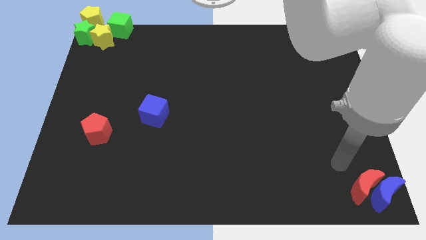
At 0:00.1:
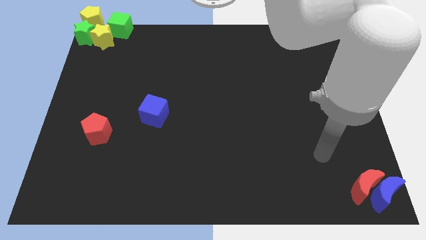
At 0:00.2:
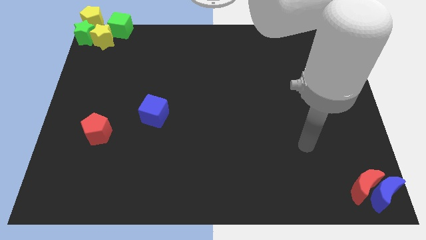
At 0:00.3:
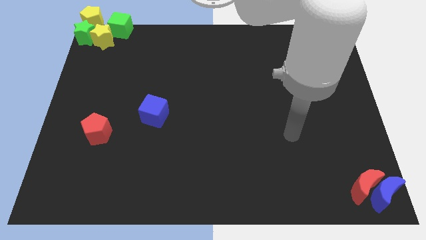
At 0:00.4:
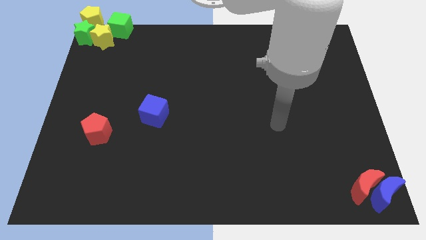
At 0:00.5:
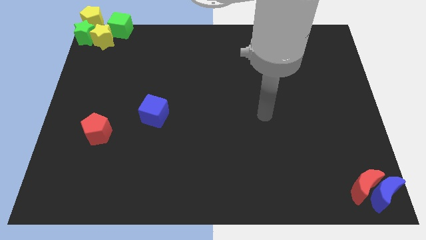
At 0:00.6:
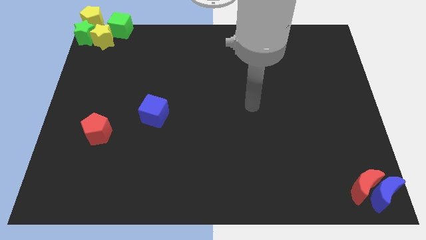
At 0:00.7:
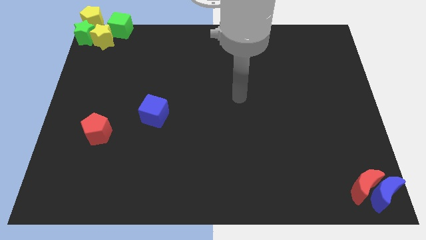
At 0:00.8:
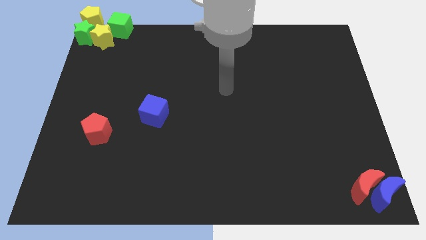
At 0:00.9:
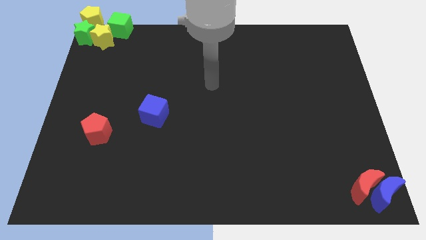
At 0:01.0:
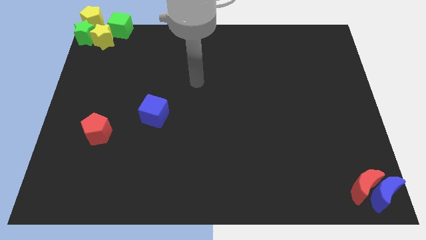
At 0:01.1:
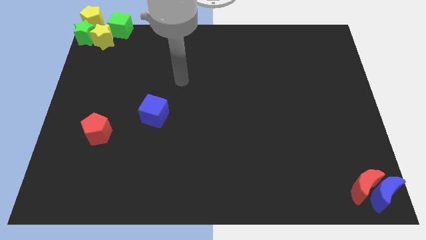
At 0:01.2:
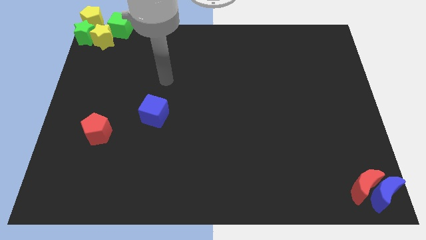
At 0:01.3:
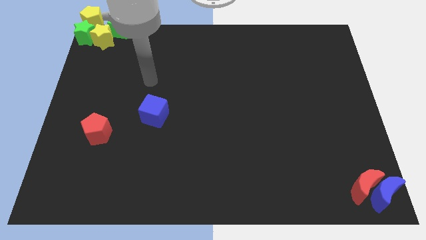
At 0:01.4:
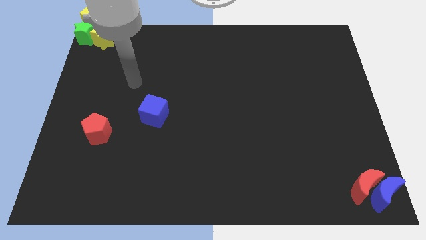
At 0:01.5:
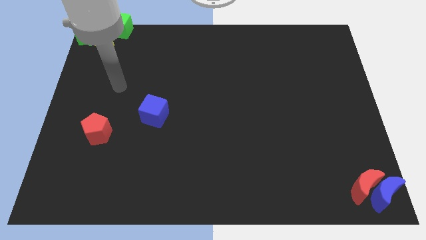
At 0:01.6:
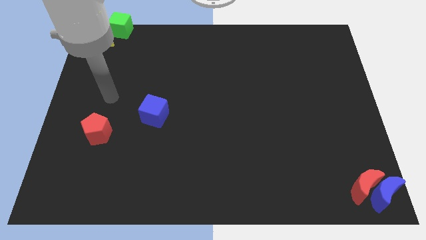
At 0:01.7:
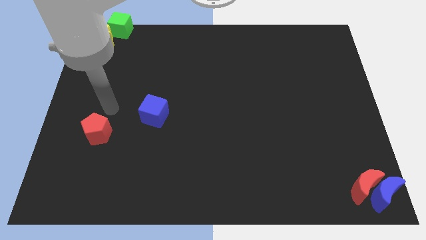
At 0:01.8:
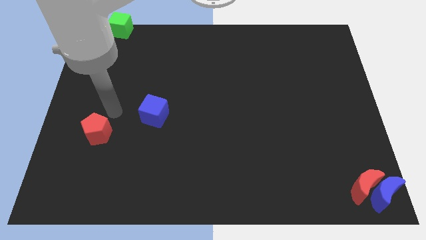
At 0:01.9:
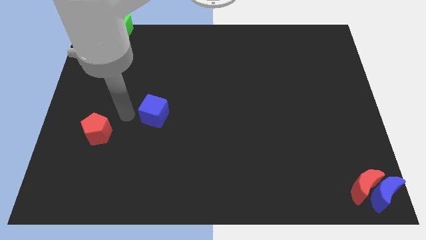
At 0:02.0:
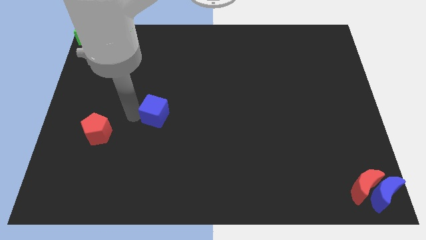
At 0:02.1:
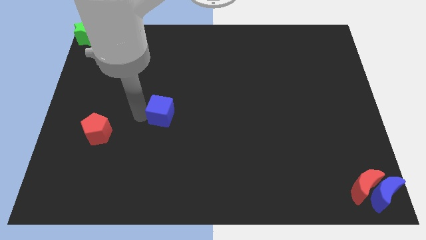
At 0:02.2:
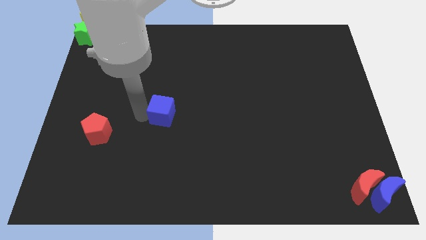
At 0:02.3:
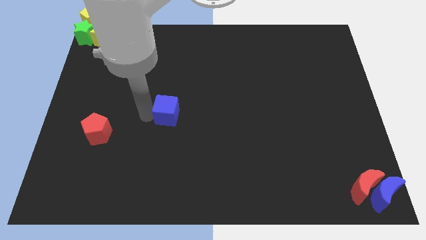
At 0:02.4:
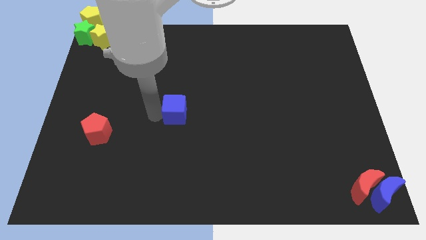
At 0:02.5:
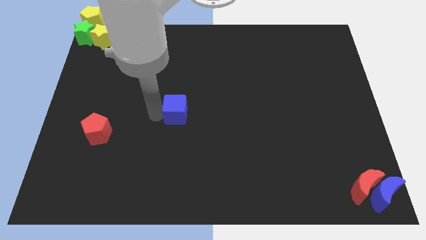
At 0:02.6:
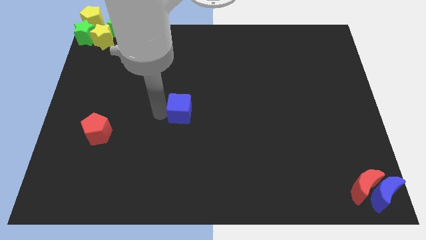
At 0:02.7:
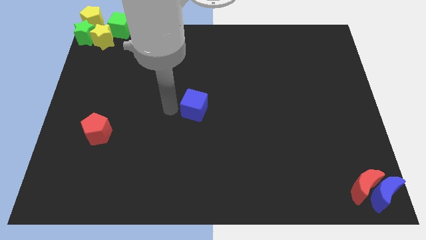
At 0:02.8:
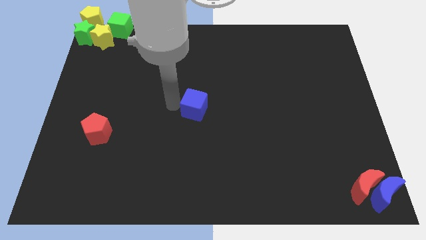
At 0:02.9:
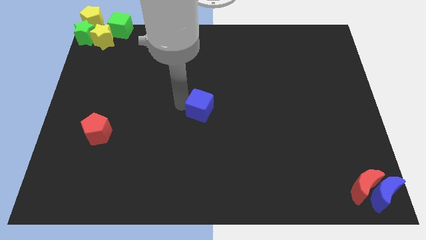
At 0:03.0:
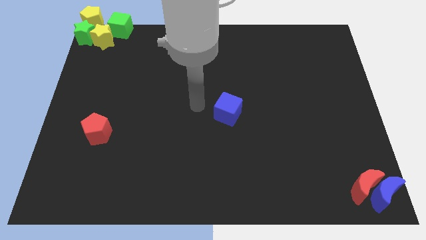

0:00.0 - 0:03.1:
move the blue cube to the center of the board

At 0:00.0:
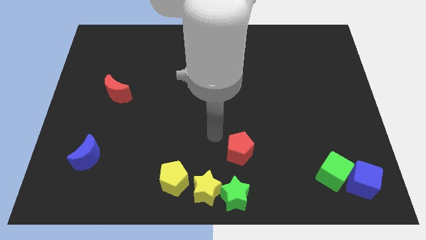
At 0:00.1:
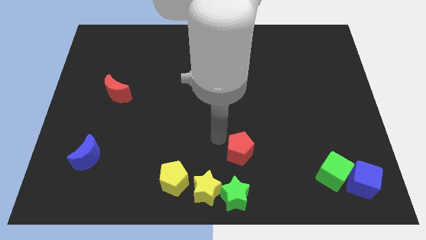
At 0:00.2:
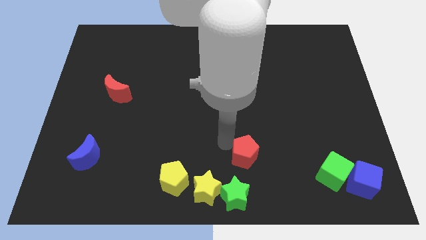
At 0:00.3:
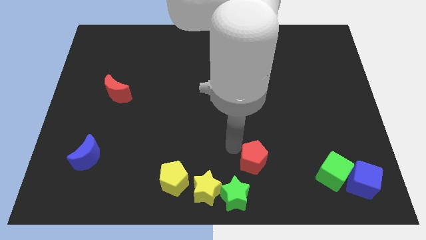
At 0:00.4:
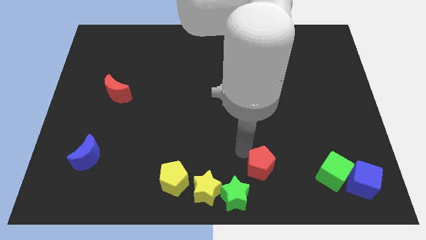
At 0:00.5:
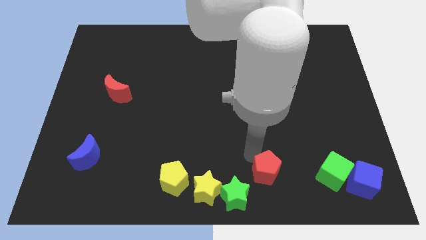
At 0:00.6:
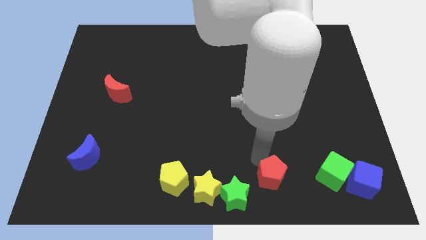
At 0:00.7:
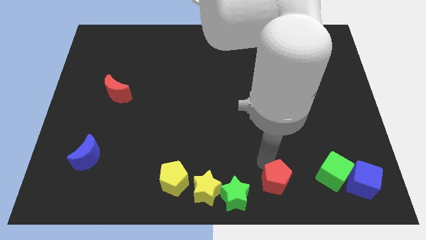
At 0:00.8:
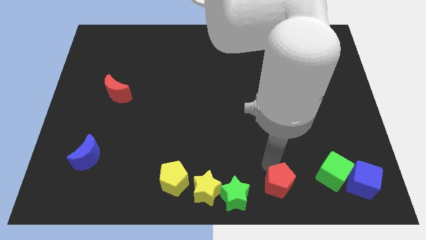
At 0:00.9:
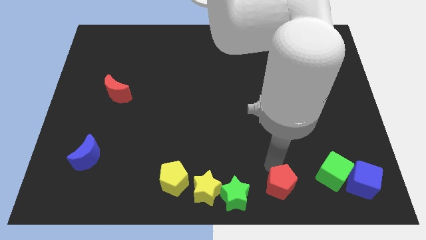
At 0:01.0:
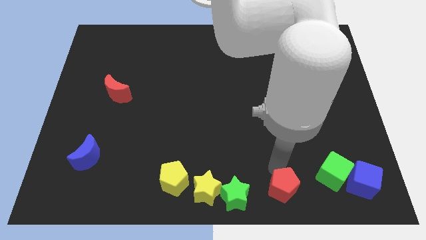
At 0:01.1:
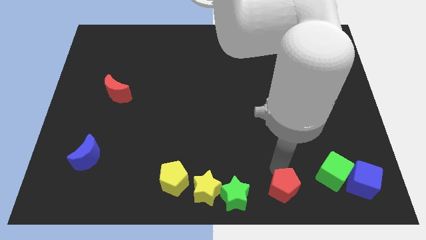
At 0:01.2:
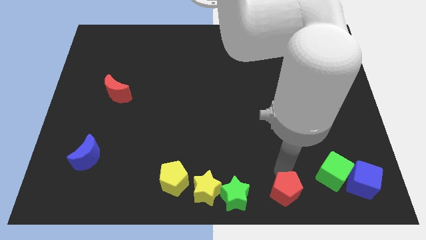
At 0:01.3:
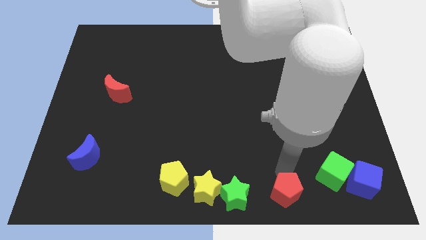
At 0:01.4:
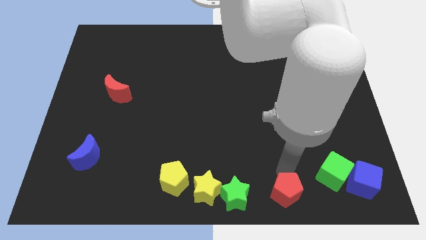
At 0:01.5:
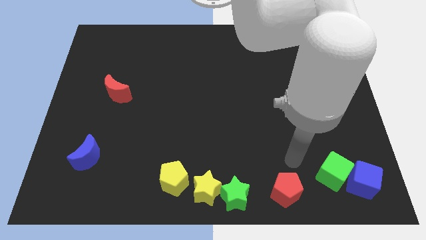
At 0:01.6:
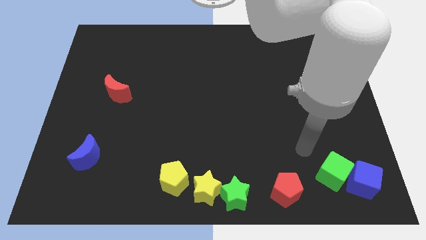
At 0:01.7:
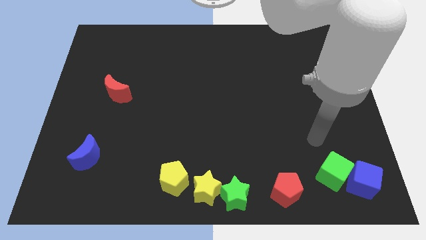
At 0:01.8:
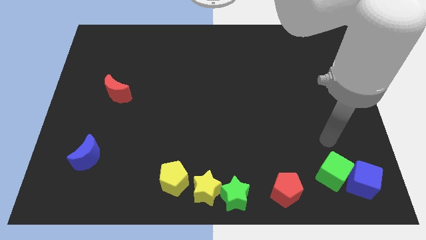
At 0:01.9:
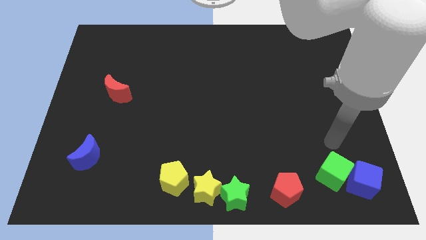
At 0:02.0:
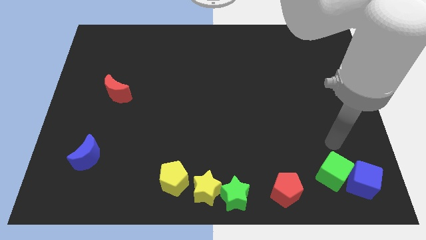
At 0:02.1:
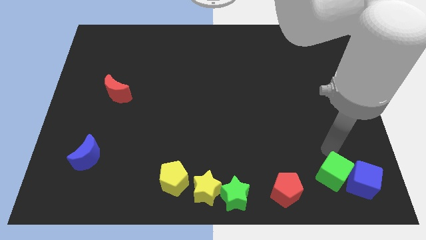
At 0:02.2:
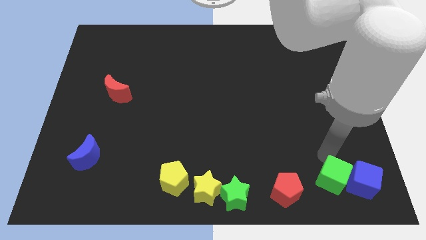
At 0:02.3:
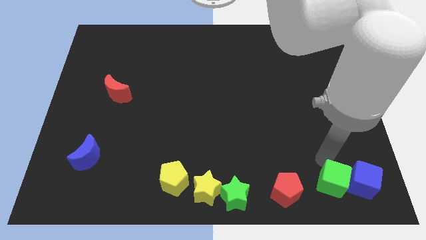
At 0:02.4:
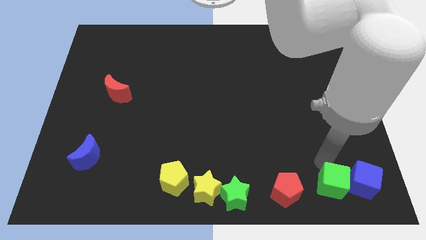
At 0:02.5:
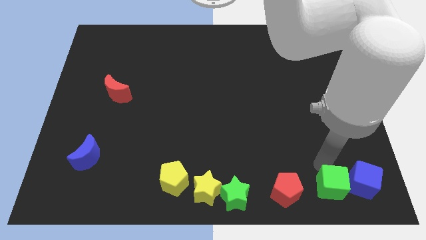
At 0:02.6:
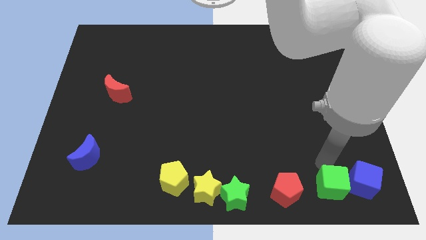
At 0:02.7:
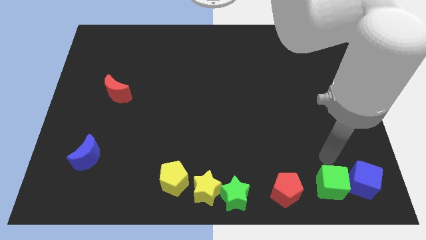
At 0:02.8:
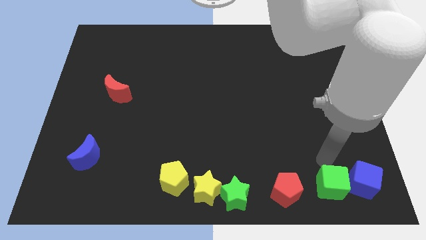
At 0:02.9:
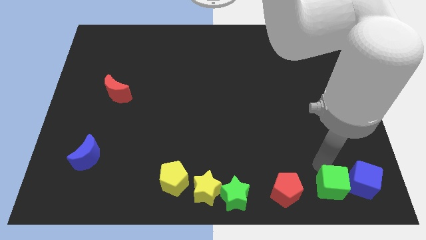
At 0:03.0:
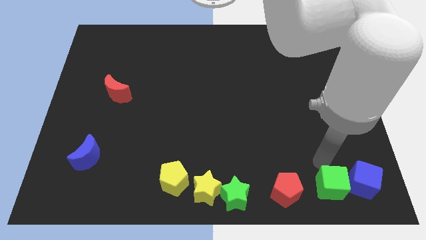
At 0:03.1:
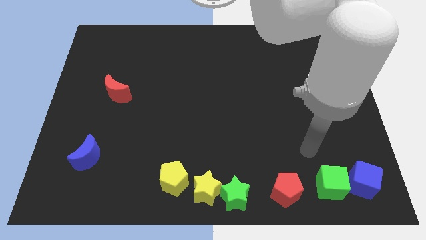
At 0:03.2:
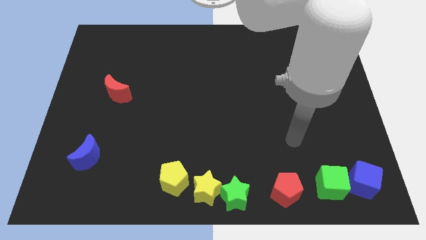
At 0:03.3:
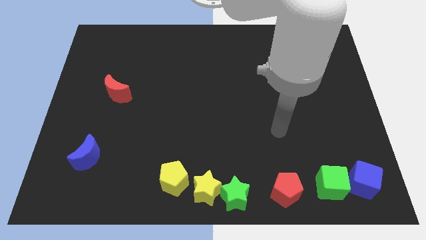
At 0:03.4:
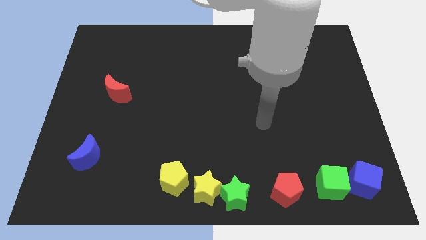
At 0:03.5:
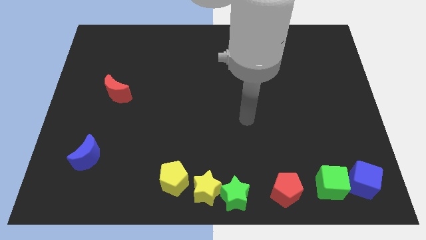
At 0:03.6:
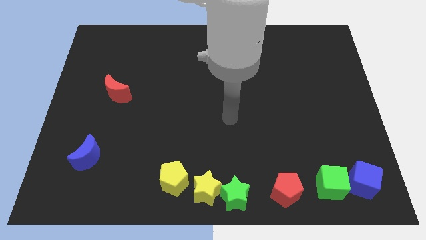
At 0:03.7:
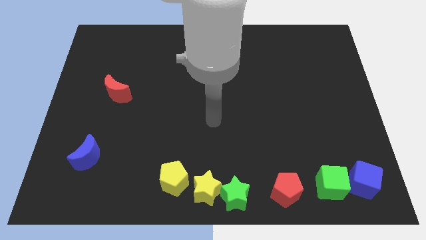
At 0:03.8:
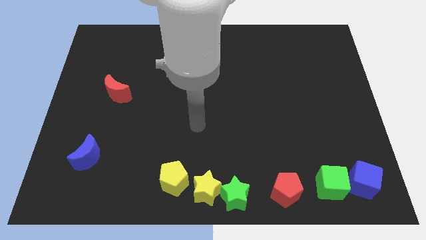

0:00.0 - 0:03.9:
place the red pentagon and the green cube parallel to the group of blocks

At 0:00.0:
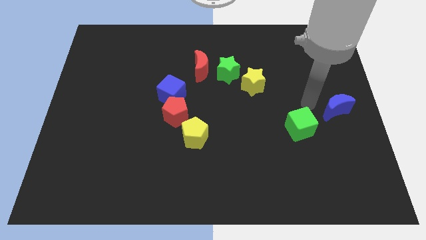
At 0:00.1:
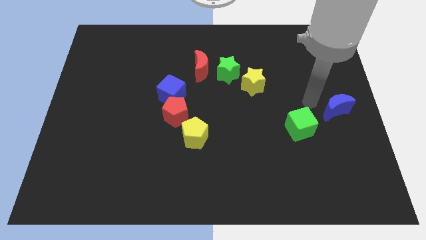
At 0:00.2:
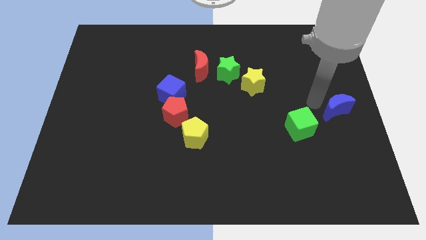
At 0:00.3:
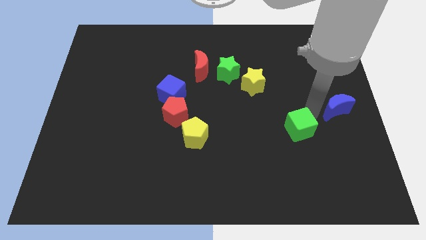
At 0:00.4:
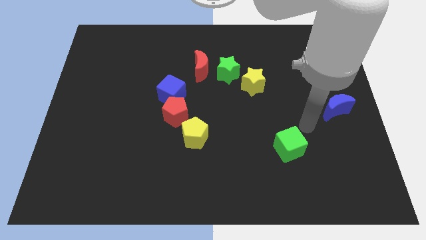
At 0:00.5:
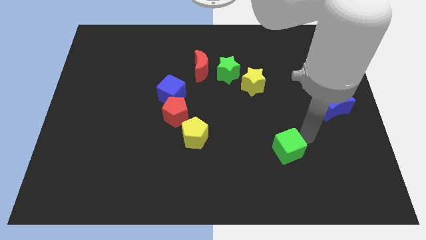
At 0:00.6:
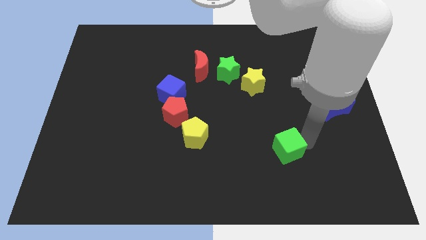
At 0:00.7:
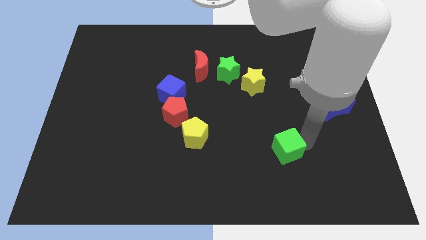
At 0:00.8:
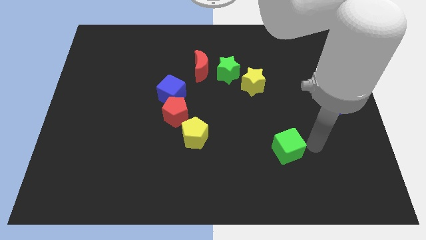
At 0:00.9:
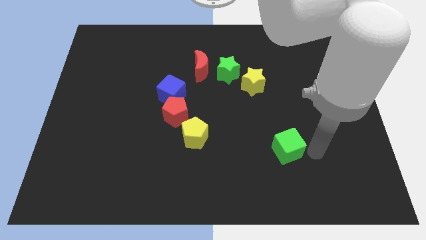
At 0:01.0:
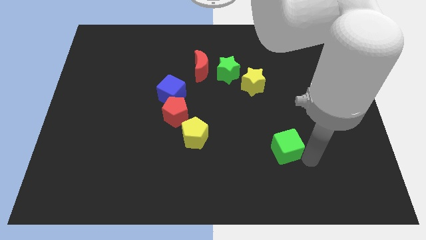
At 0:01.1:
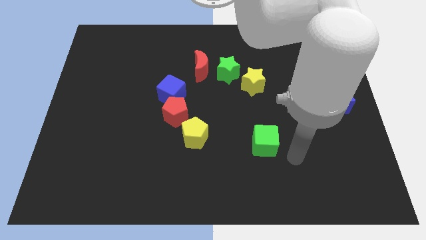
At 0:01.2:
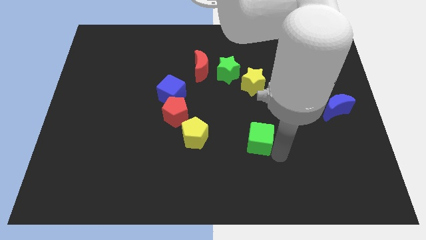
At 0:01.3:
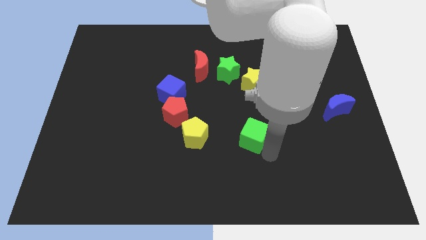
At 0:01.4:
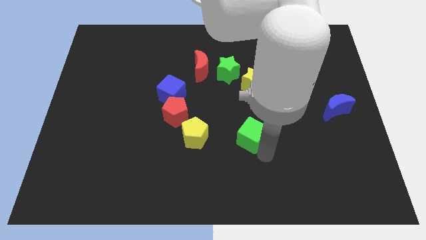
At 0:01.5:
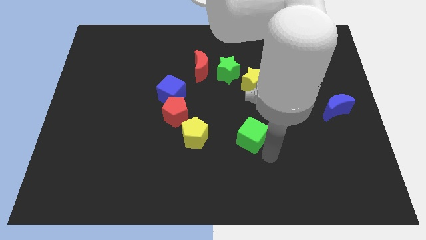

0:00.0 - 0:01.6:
place the green cube to the right of the yellow pentagon

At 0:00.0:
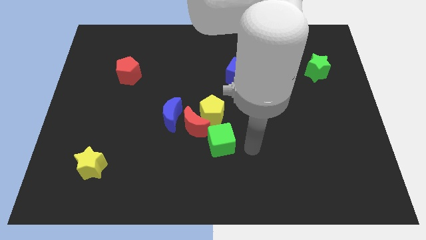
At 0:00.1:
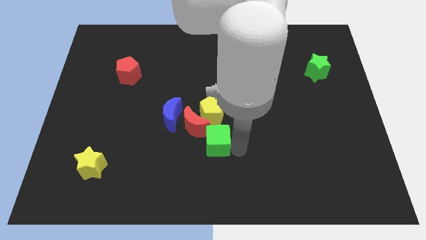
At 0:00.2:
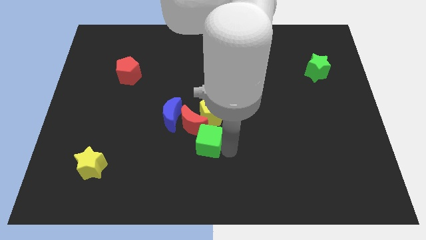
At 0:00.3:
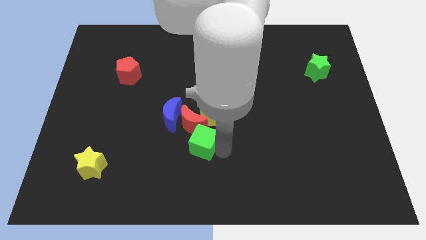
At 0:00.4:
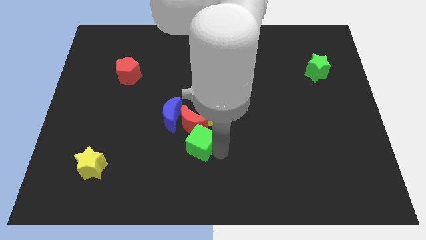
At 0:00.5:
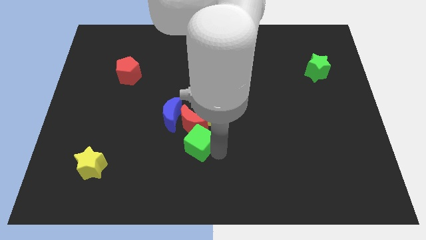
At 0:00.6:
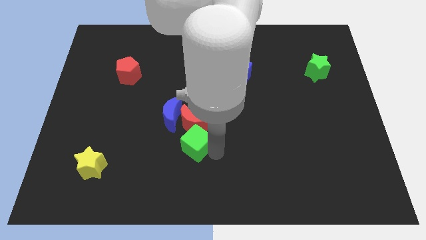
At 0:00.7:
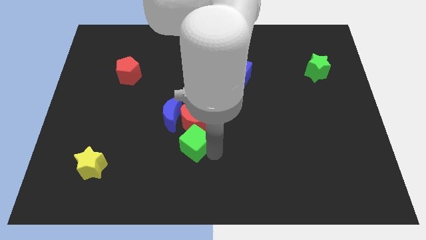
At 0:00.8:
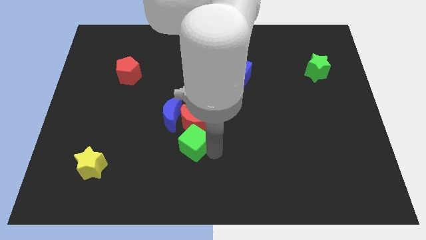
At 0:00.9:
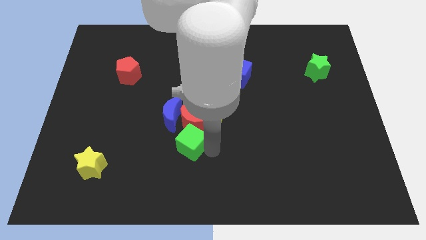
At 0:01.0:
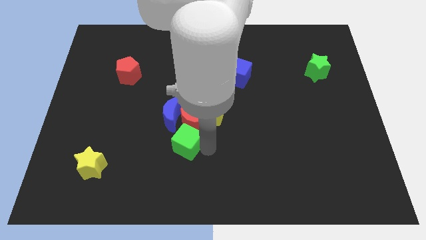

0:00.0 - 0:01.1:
place the green cube to the bottom of the red crescent
